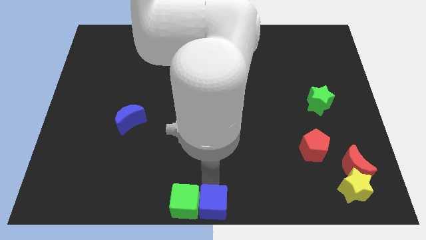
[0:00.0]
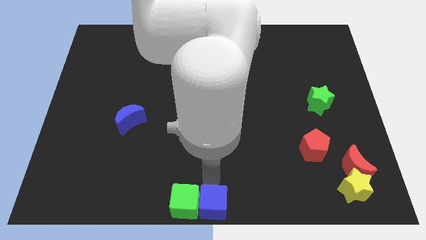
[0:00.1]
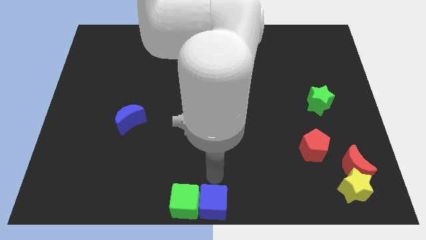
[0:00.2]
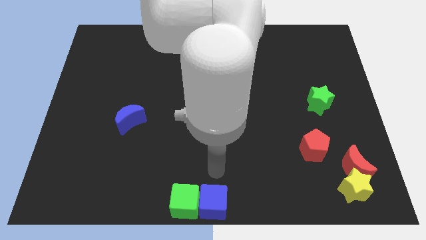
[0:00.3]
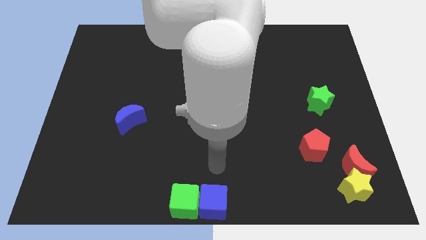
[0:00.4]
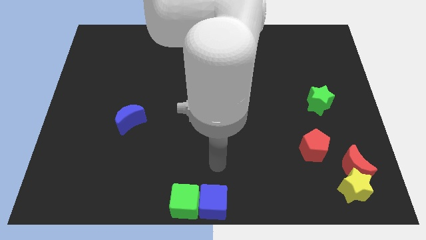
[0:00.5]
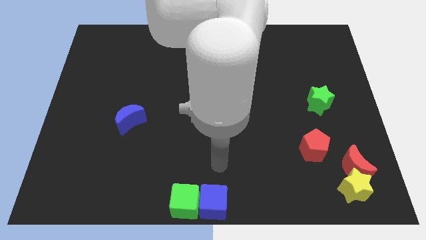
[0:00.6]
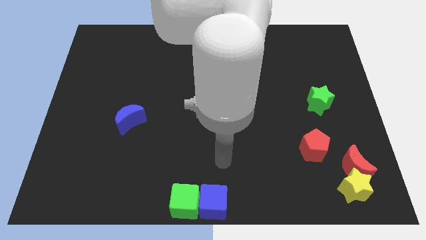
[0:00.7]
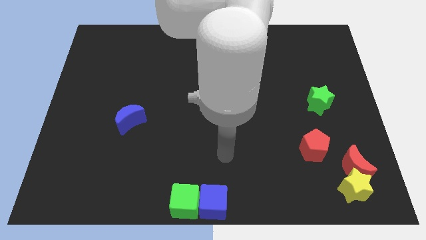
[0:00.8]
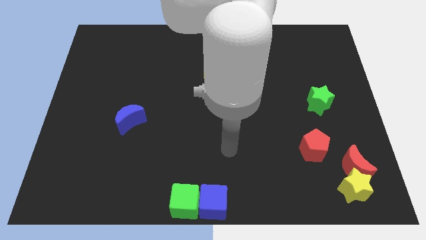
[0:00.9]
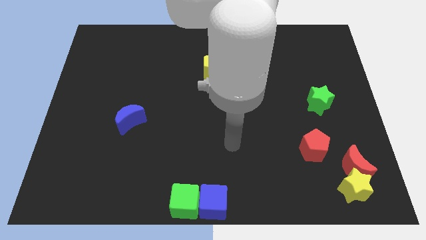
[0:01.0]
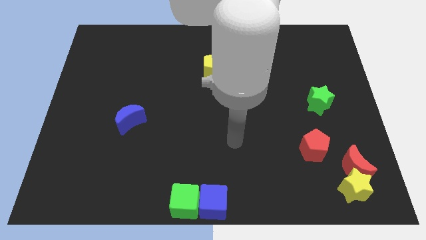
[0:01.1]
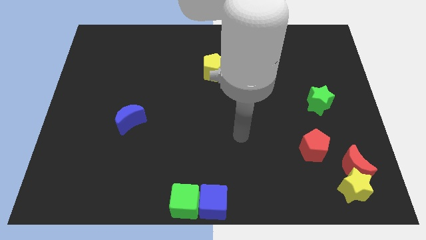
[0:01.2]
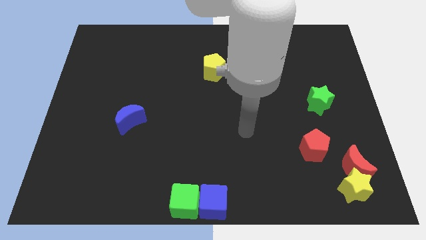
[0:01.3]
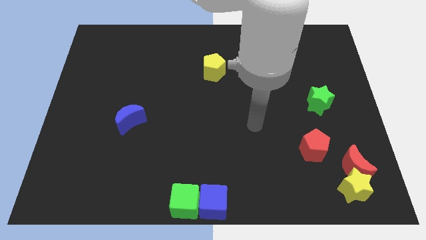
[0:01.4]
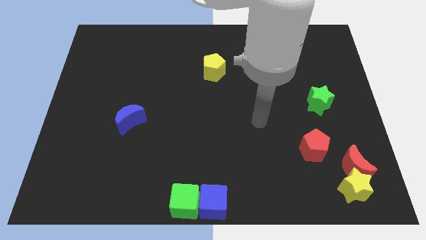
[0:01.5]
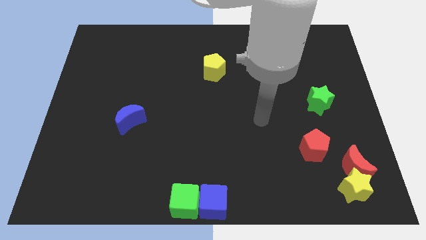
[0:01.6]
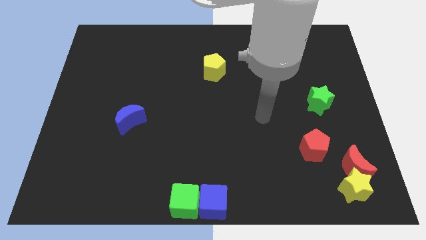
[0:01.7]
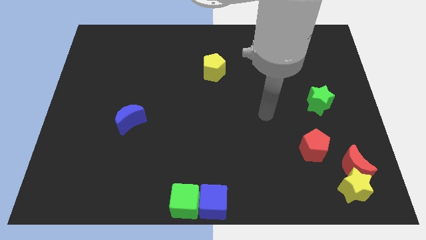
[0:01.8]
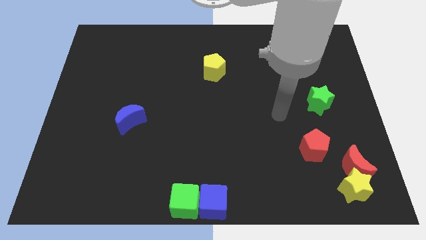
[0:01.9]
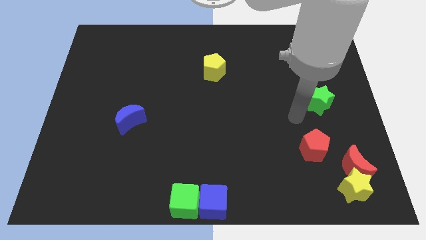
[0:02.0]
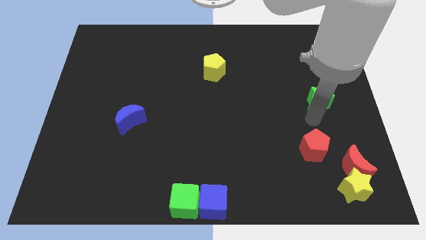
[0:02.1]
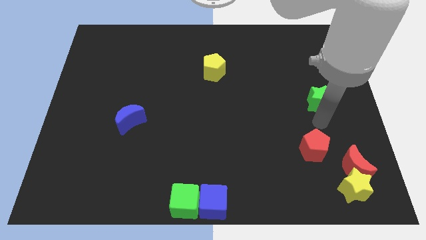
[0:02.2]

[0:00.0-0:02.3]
move your arm away from the blue cube

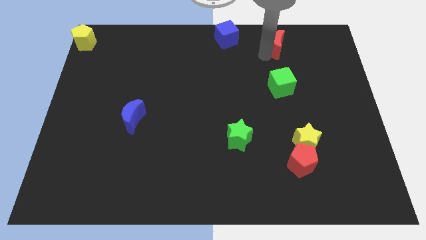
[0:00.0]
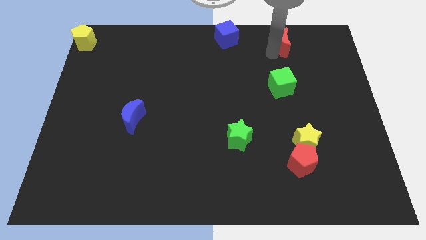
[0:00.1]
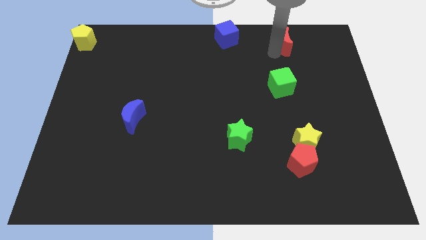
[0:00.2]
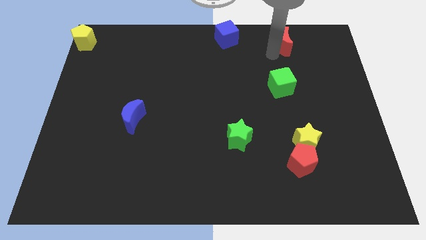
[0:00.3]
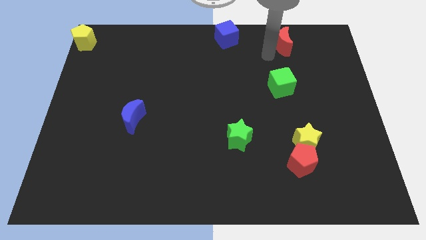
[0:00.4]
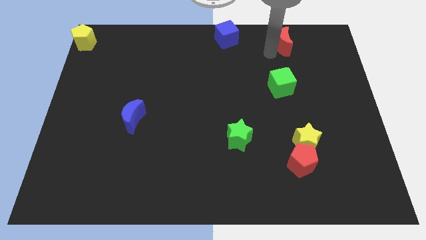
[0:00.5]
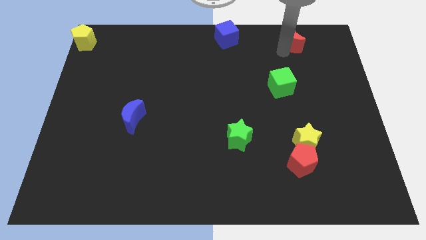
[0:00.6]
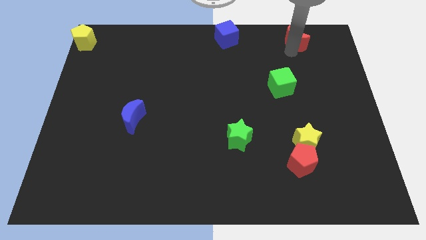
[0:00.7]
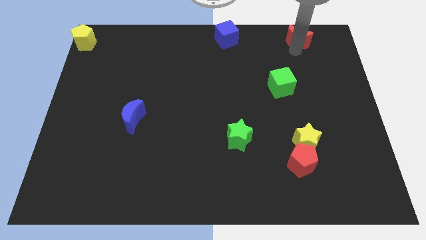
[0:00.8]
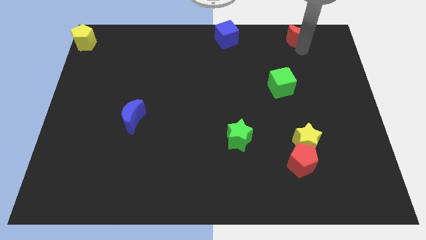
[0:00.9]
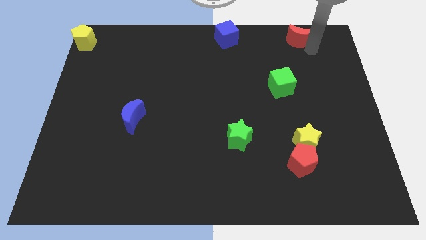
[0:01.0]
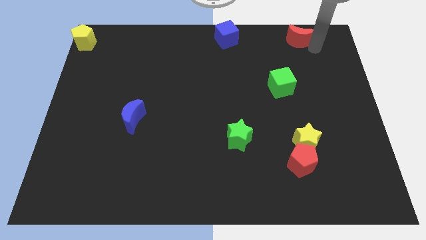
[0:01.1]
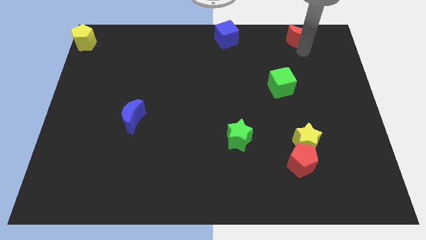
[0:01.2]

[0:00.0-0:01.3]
push red moon to the top

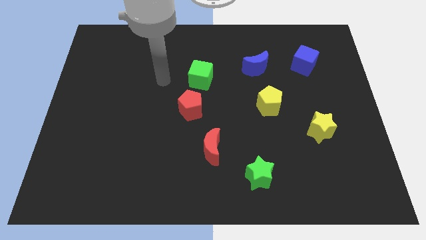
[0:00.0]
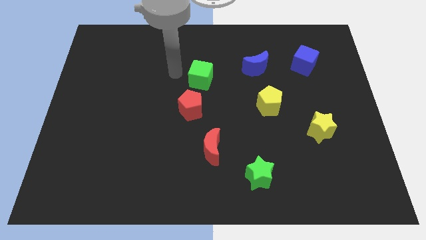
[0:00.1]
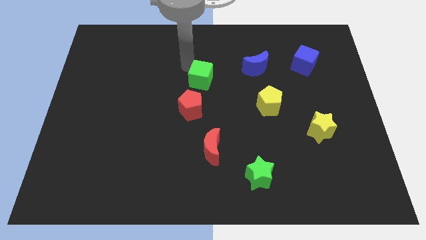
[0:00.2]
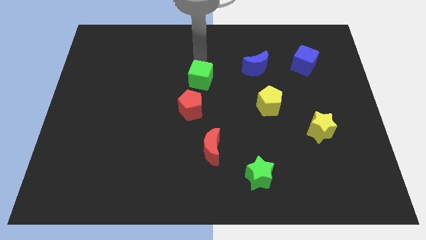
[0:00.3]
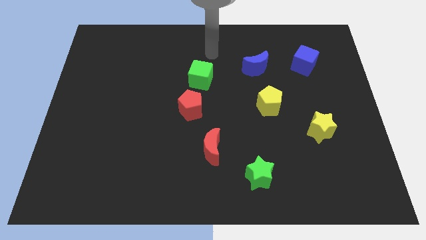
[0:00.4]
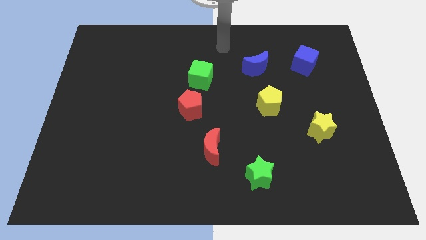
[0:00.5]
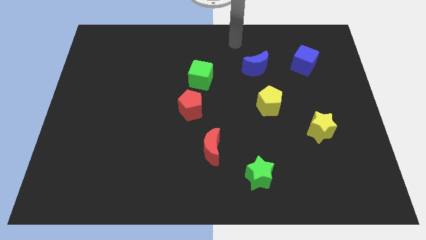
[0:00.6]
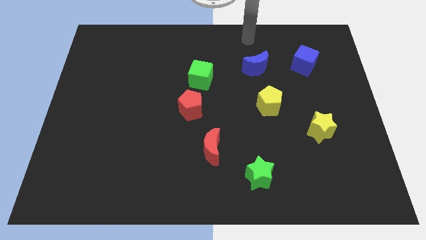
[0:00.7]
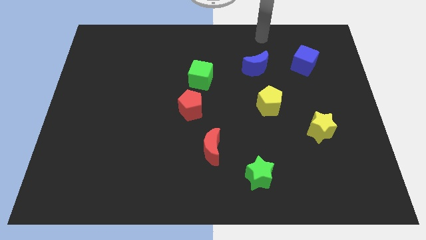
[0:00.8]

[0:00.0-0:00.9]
move the arm towards the blue crescent

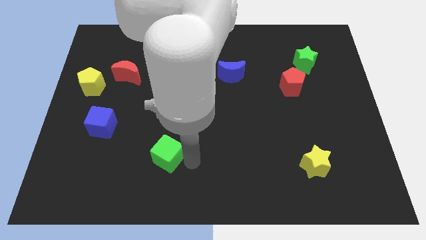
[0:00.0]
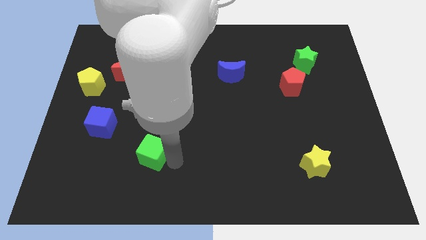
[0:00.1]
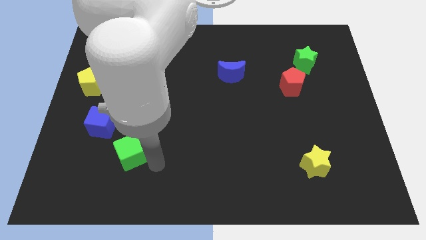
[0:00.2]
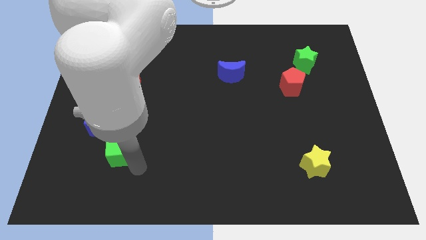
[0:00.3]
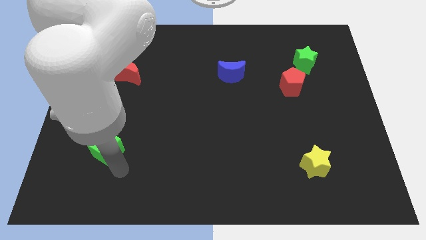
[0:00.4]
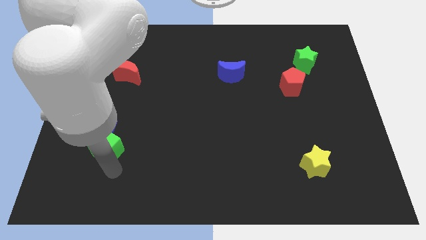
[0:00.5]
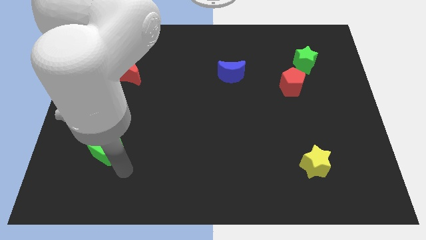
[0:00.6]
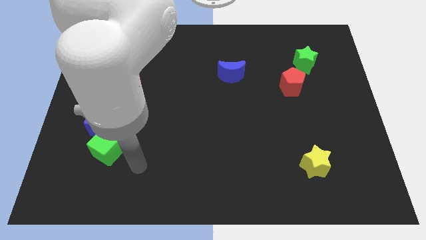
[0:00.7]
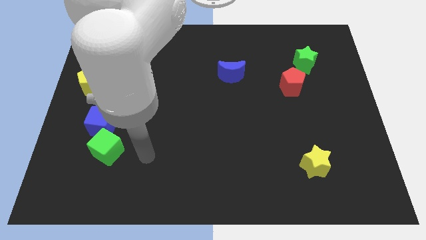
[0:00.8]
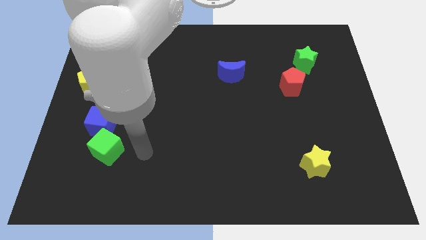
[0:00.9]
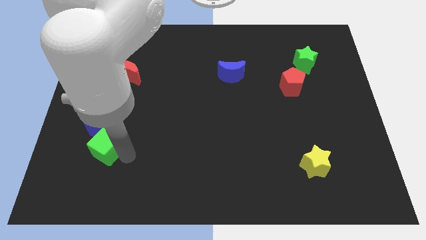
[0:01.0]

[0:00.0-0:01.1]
push the green cube to the bottom side of the blue cube

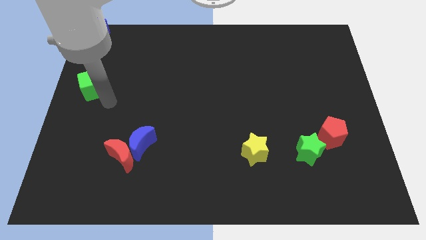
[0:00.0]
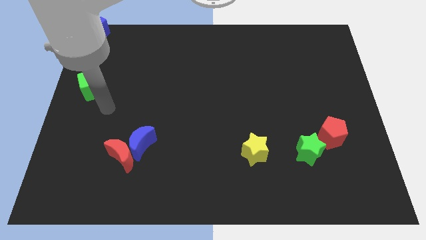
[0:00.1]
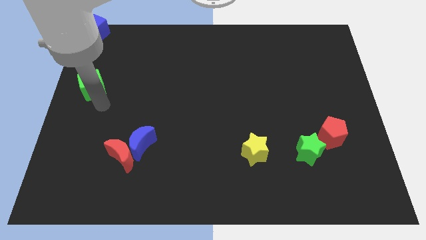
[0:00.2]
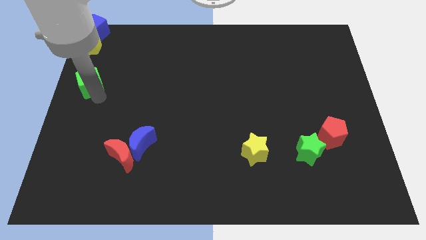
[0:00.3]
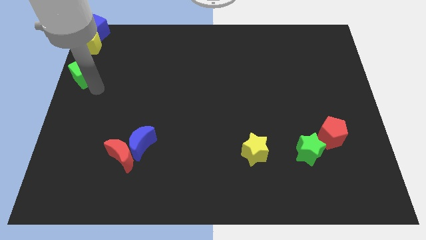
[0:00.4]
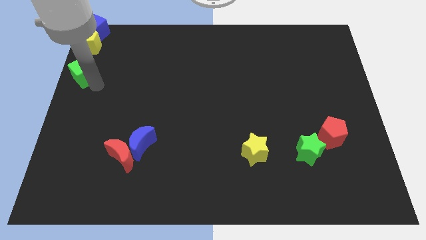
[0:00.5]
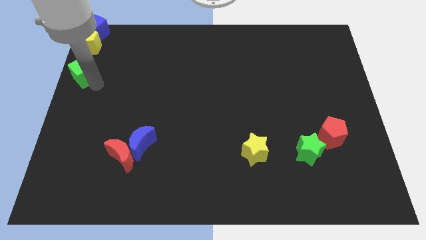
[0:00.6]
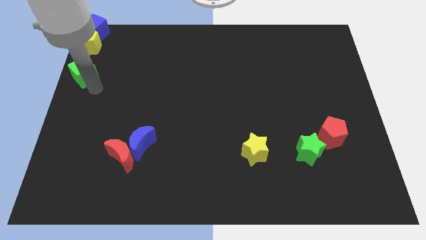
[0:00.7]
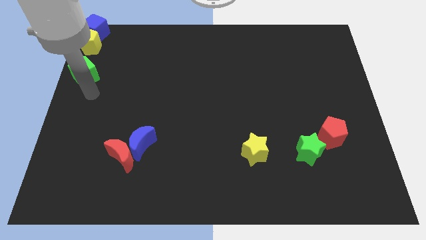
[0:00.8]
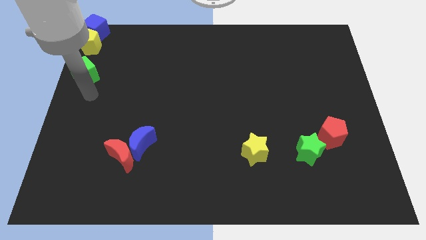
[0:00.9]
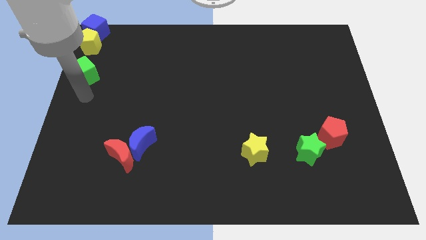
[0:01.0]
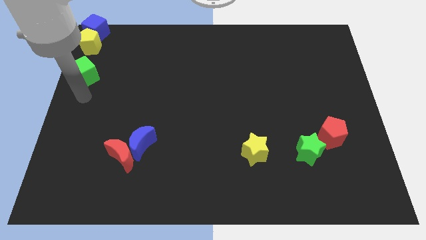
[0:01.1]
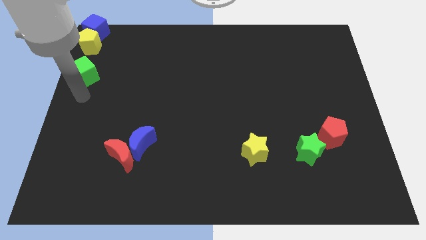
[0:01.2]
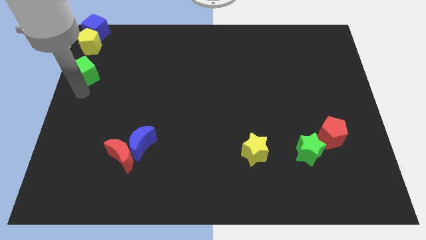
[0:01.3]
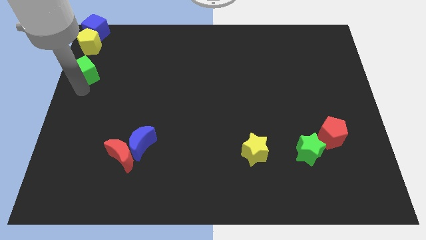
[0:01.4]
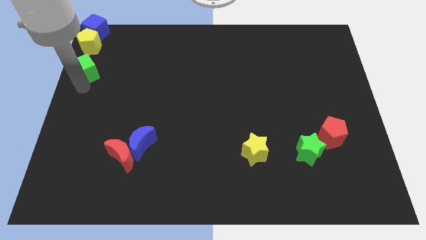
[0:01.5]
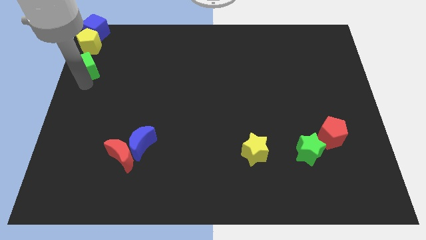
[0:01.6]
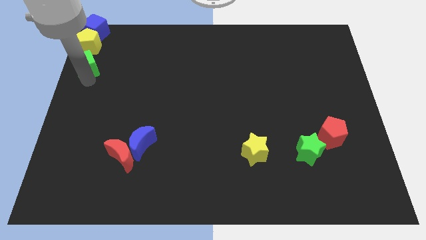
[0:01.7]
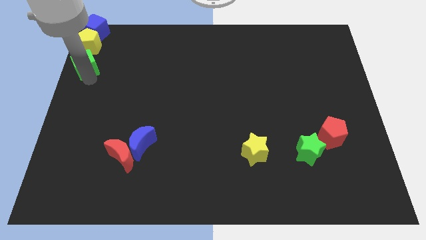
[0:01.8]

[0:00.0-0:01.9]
place the green cube below the yellow pentagon to form a vertical line

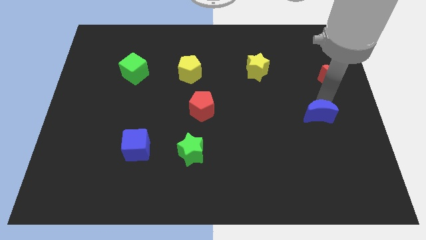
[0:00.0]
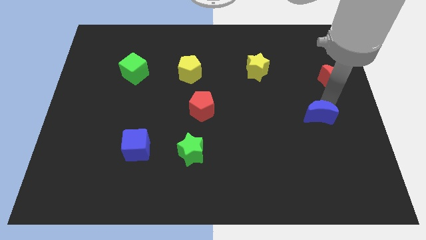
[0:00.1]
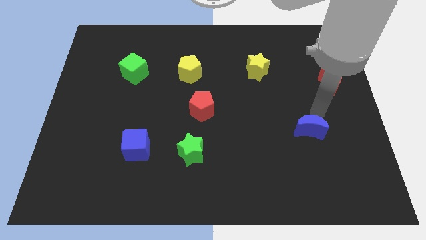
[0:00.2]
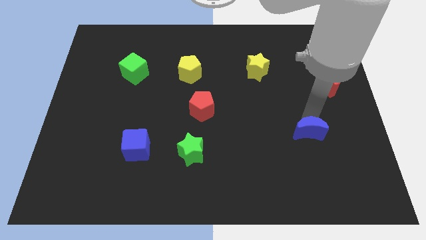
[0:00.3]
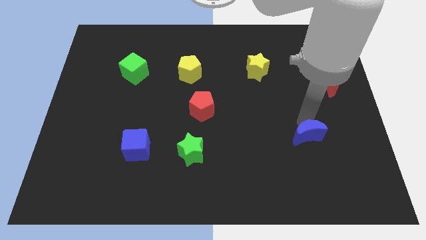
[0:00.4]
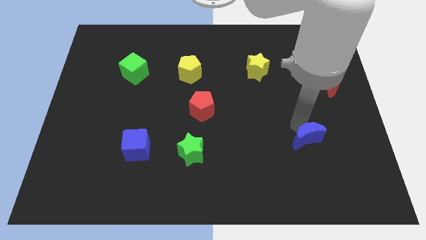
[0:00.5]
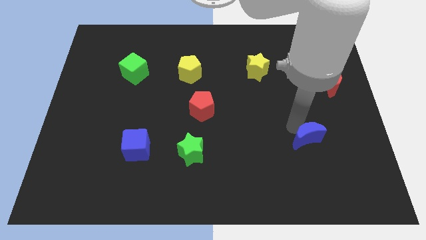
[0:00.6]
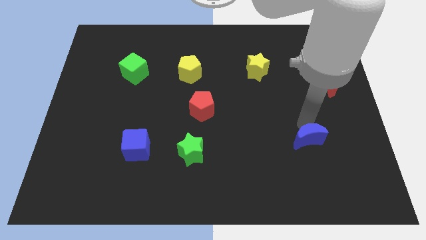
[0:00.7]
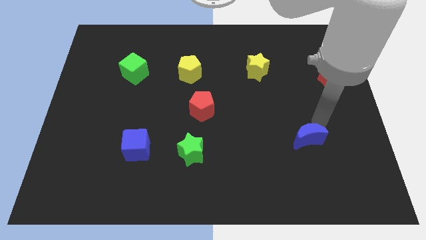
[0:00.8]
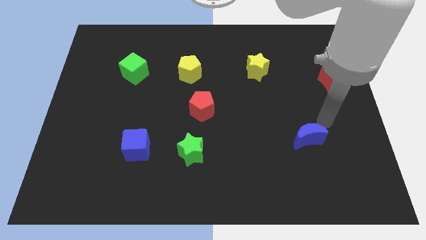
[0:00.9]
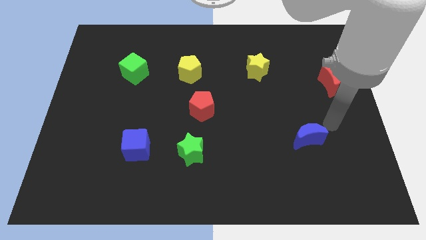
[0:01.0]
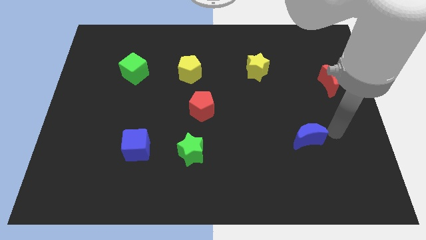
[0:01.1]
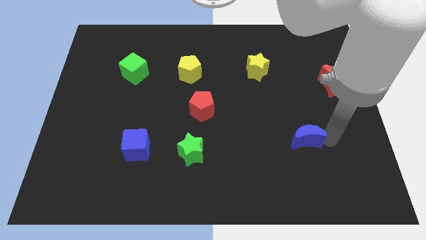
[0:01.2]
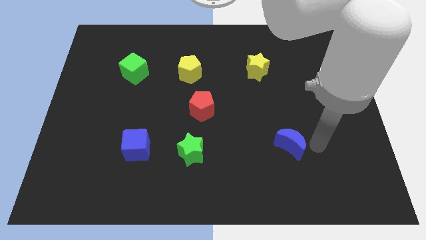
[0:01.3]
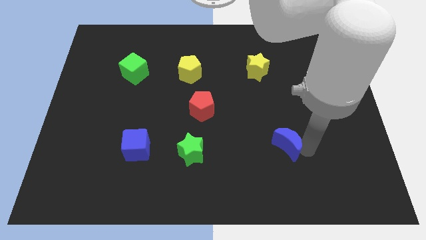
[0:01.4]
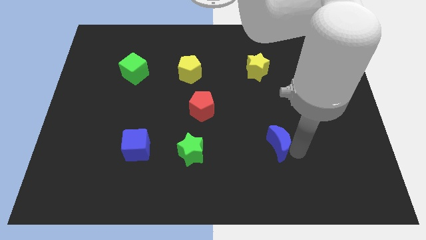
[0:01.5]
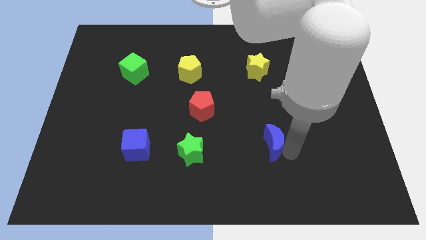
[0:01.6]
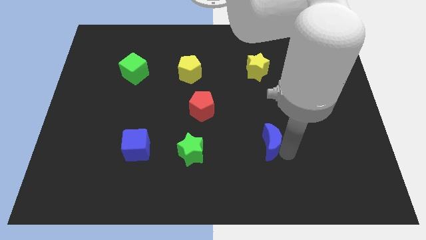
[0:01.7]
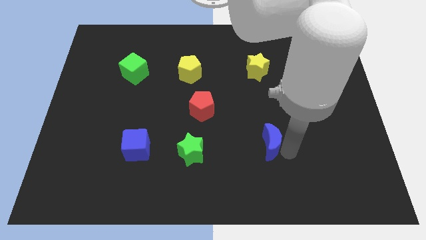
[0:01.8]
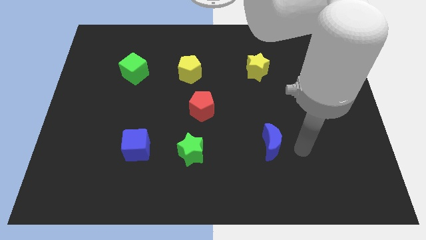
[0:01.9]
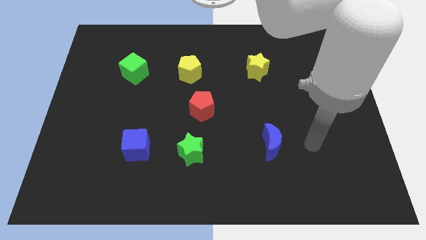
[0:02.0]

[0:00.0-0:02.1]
move the blue crescent to the bottom center of the board
